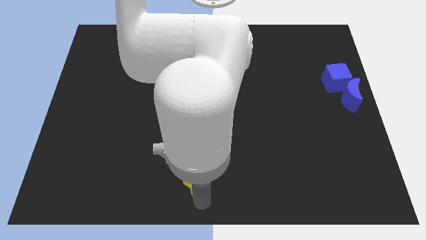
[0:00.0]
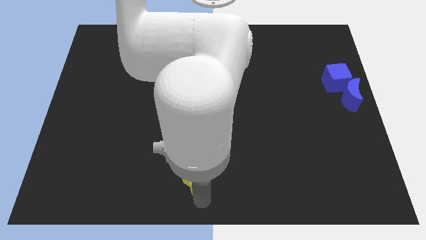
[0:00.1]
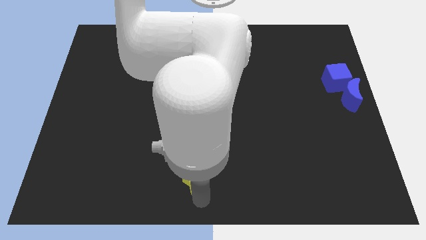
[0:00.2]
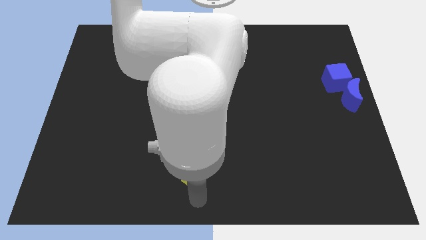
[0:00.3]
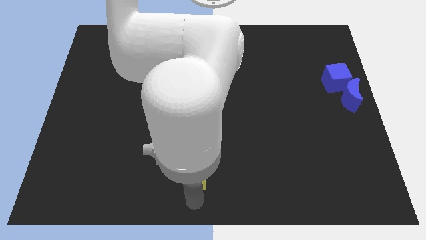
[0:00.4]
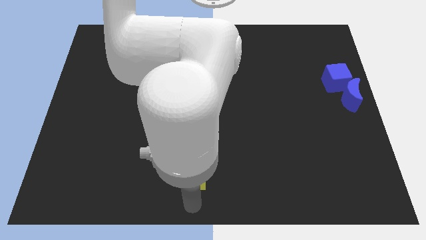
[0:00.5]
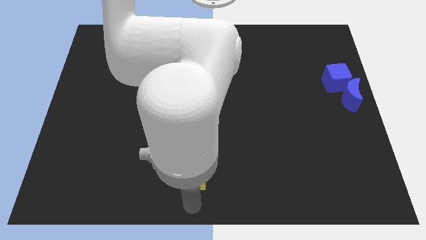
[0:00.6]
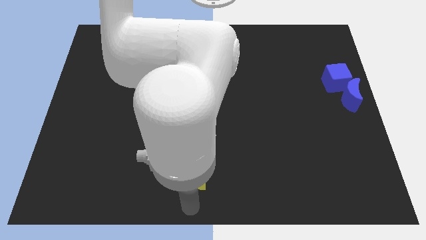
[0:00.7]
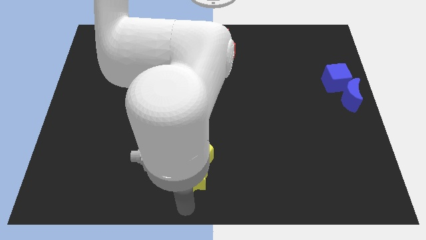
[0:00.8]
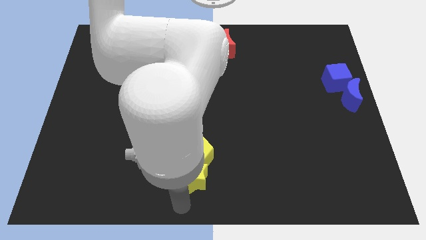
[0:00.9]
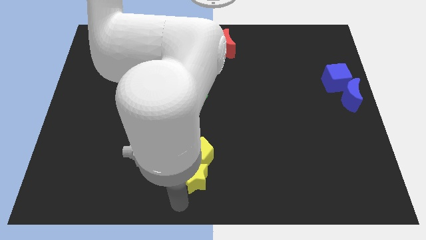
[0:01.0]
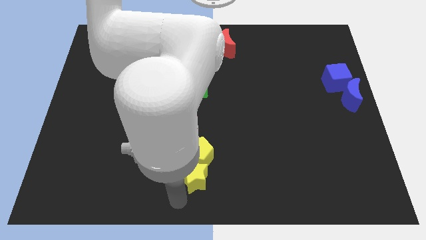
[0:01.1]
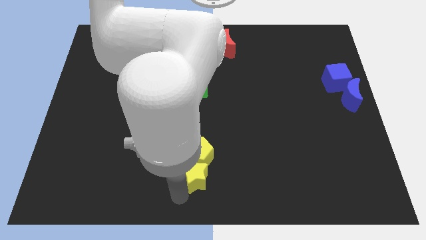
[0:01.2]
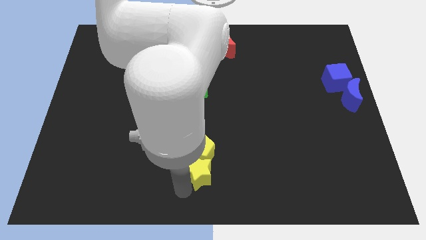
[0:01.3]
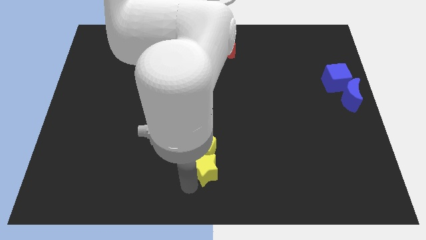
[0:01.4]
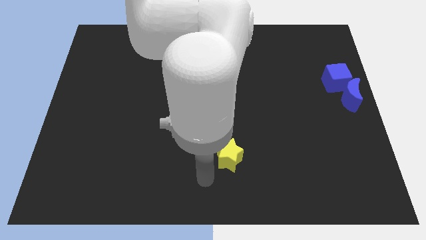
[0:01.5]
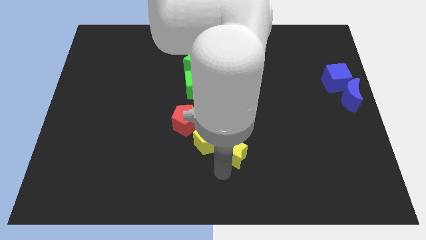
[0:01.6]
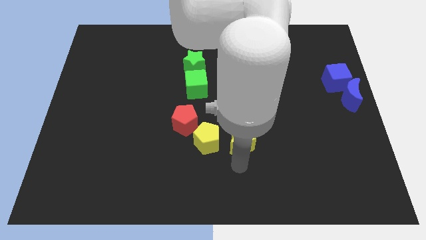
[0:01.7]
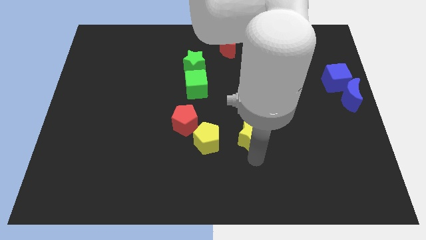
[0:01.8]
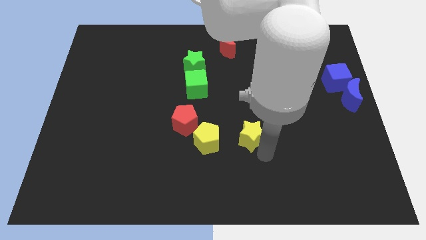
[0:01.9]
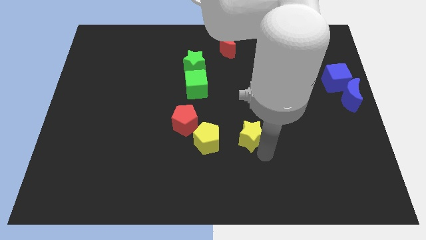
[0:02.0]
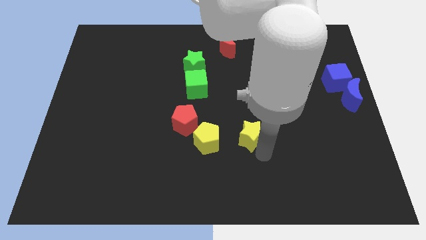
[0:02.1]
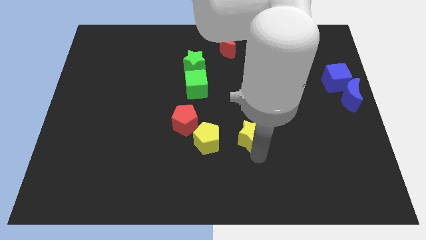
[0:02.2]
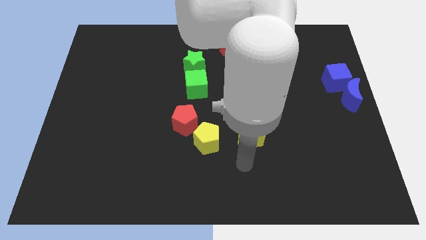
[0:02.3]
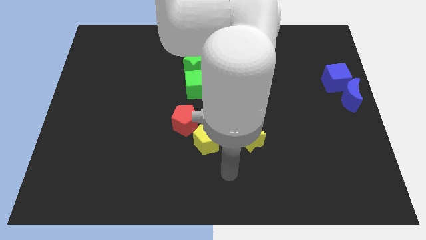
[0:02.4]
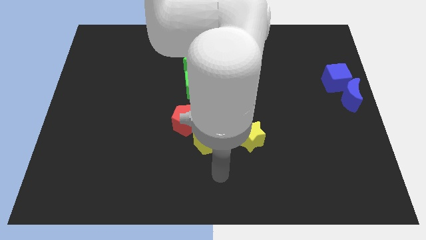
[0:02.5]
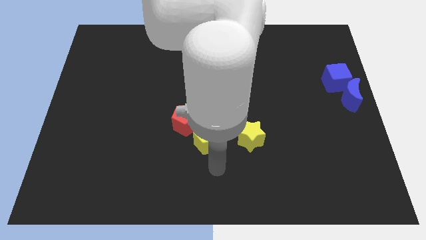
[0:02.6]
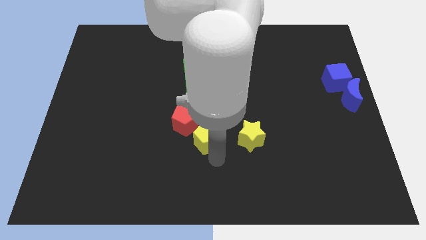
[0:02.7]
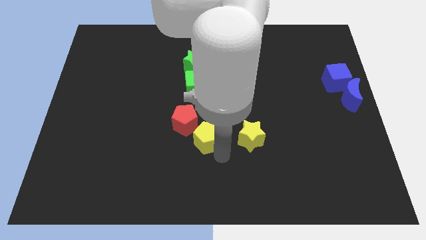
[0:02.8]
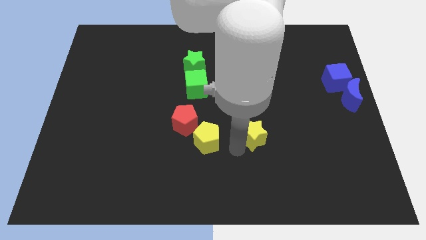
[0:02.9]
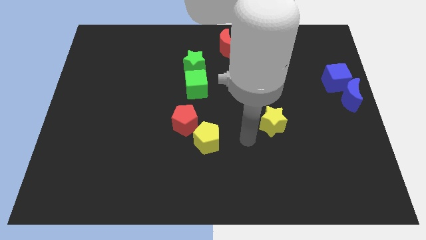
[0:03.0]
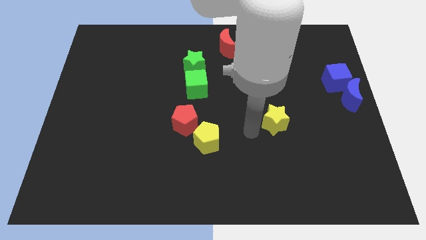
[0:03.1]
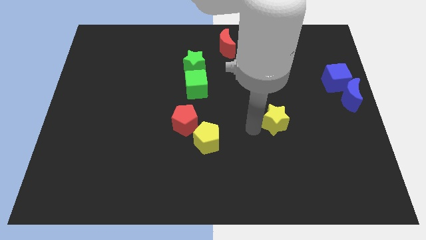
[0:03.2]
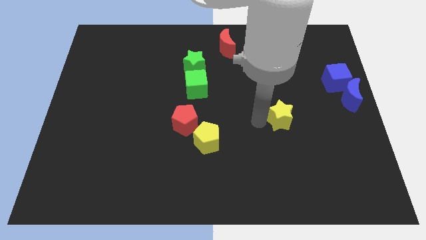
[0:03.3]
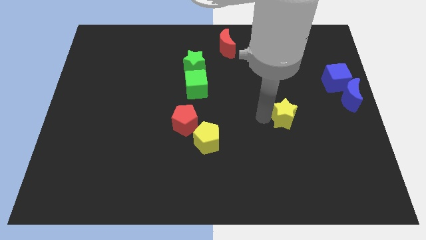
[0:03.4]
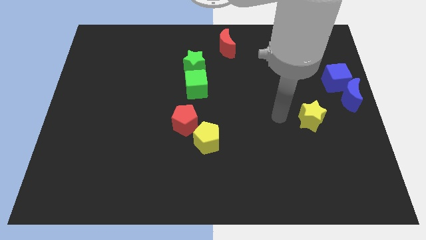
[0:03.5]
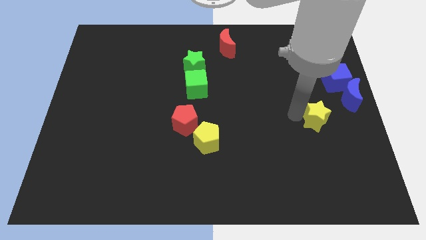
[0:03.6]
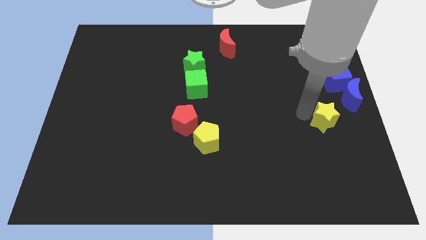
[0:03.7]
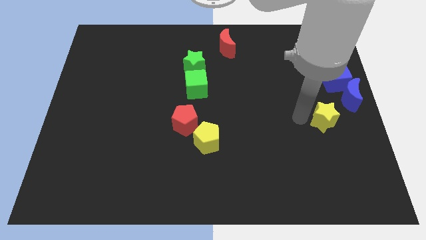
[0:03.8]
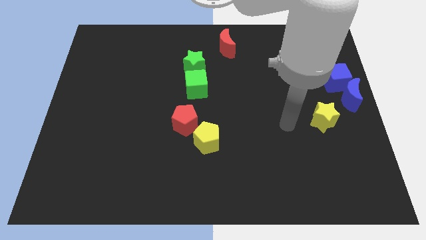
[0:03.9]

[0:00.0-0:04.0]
push yellow star towards the blue crescent

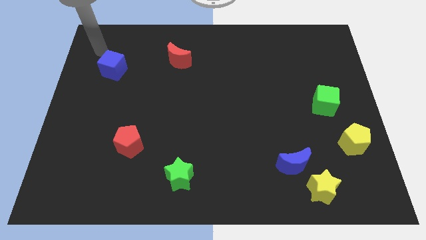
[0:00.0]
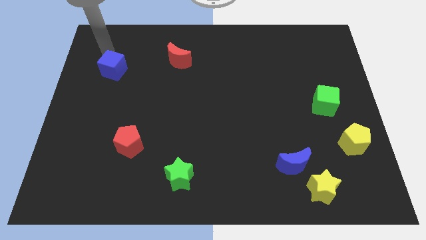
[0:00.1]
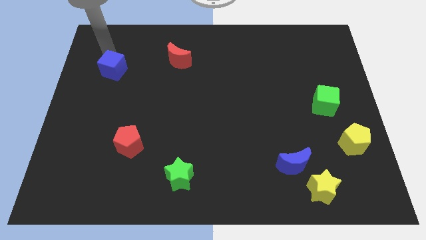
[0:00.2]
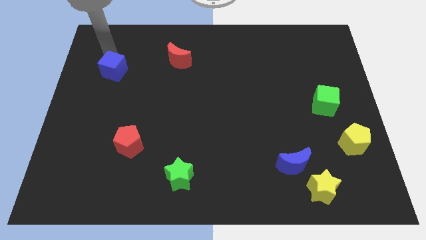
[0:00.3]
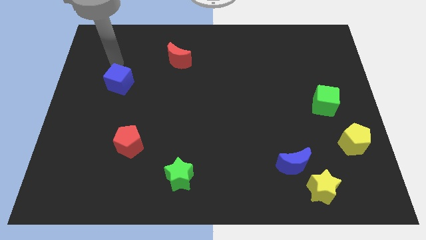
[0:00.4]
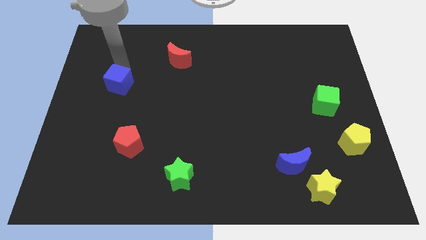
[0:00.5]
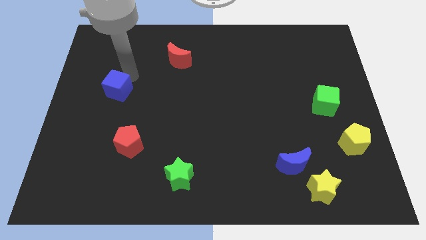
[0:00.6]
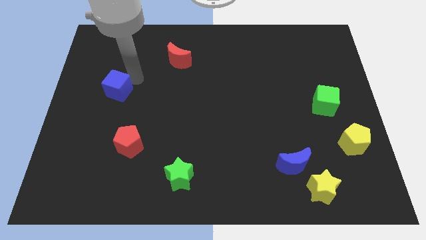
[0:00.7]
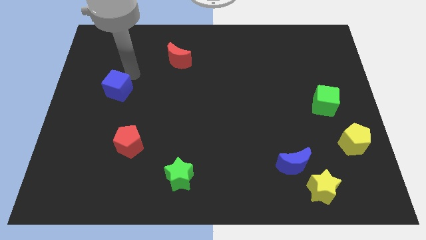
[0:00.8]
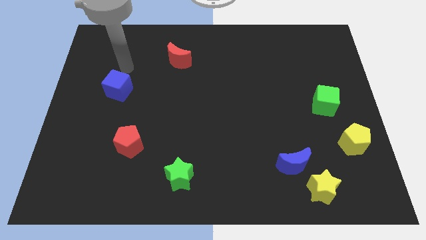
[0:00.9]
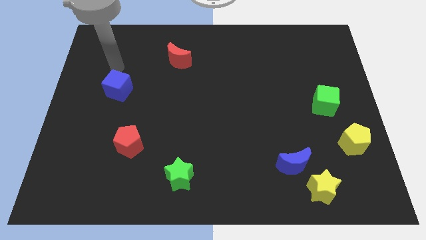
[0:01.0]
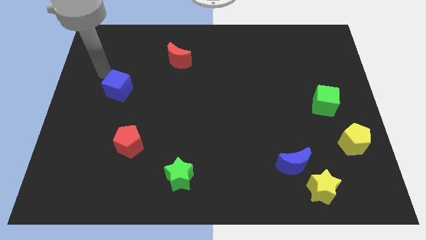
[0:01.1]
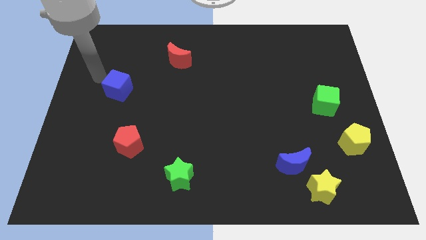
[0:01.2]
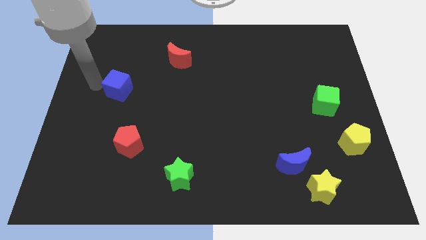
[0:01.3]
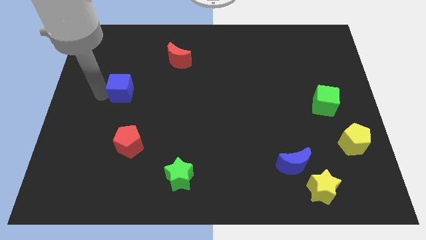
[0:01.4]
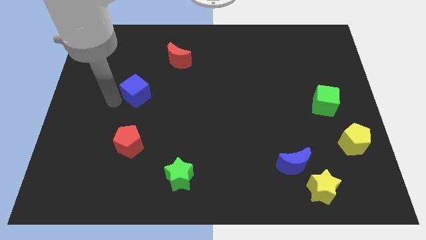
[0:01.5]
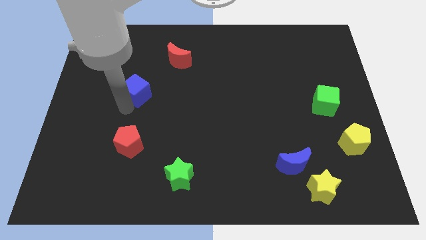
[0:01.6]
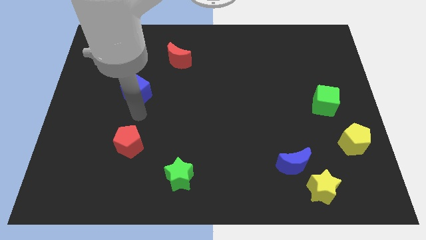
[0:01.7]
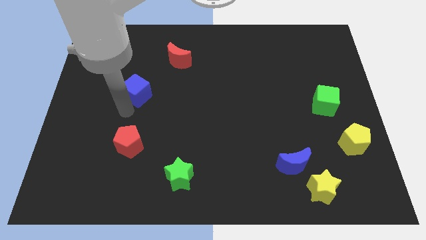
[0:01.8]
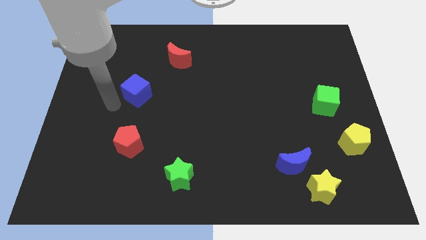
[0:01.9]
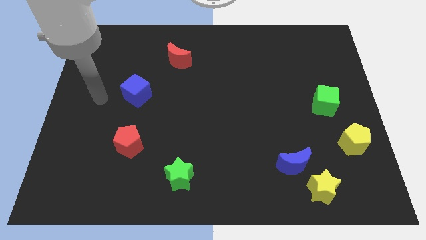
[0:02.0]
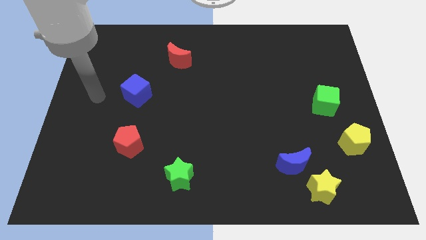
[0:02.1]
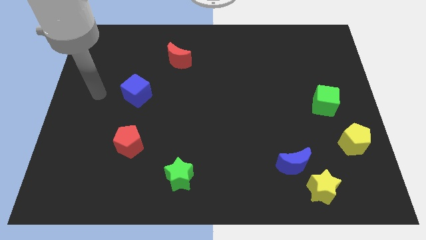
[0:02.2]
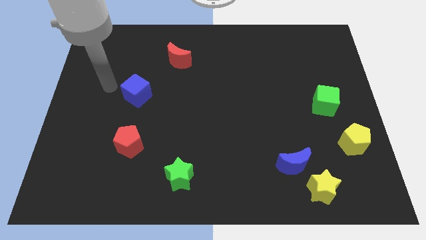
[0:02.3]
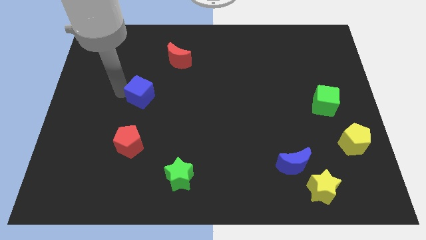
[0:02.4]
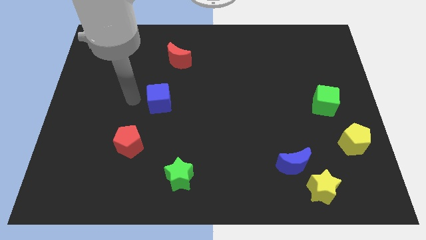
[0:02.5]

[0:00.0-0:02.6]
place the blue cube in between the red blocks

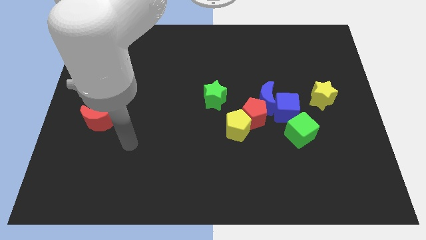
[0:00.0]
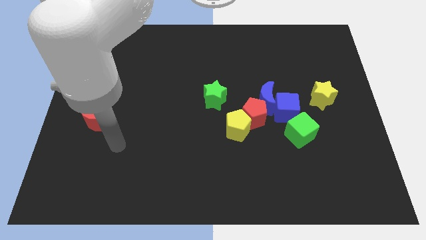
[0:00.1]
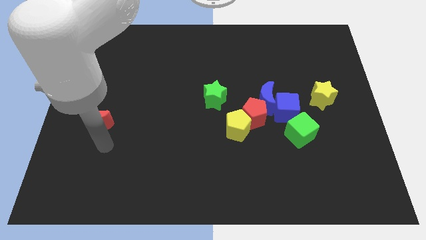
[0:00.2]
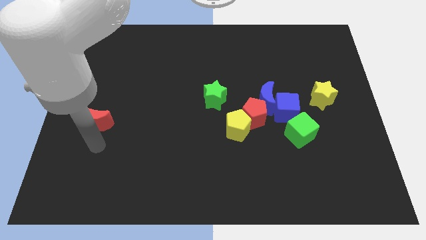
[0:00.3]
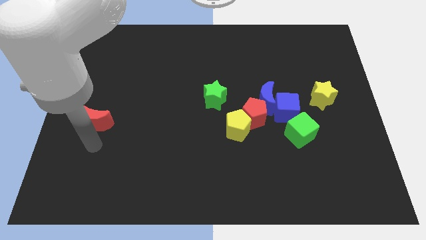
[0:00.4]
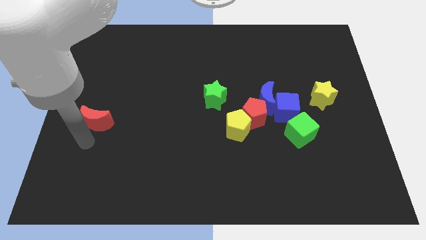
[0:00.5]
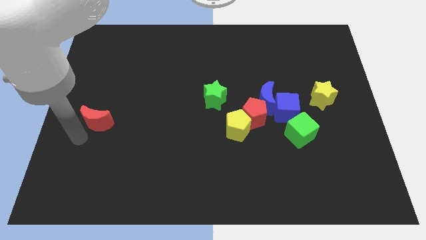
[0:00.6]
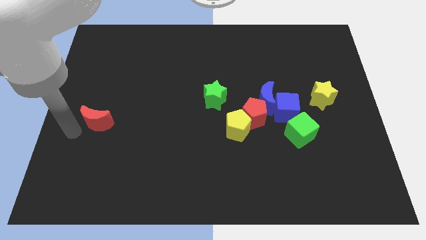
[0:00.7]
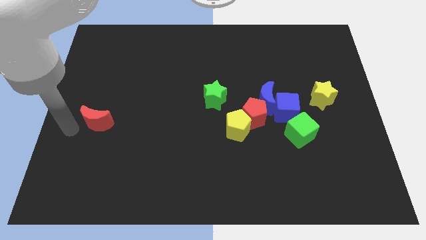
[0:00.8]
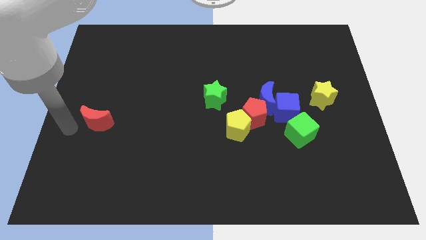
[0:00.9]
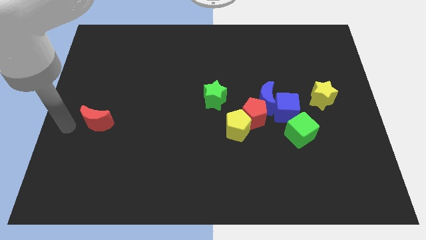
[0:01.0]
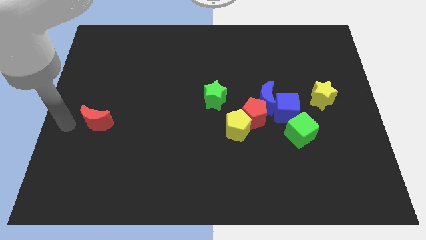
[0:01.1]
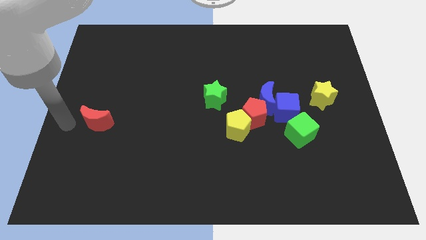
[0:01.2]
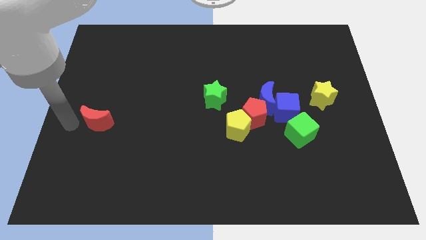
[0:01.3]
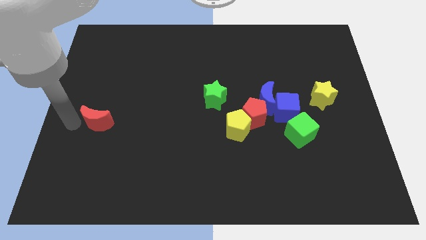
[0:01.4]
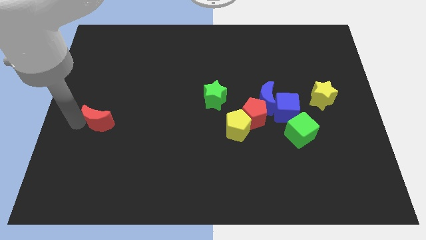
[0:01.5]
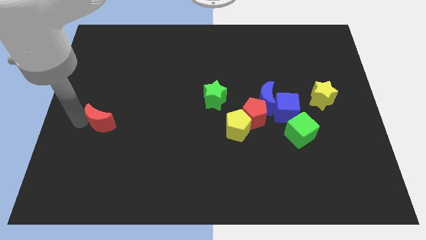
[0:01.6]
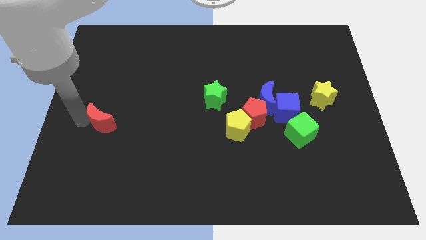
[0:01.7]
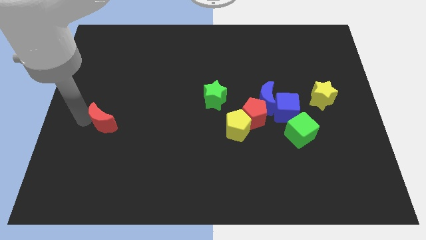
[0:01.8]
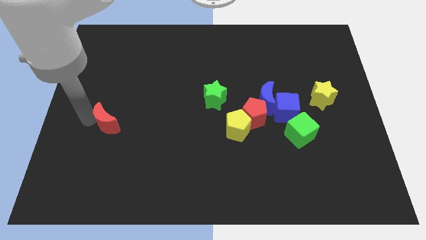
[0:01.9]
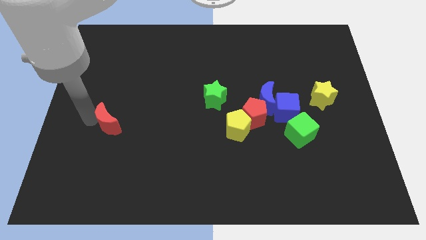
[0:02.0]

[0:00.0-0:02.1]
touch left side of red moon with your arm

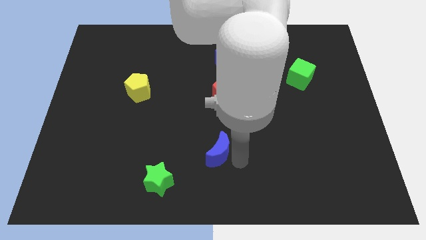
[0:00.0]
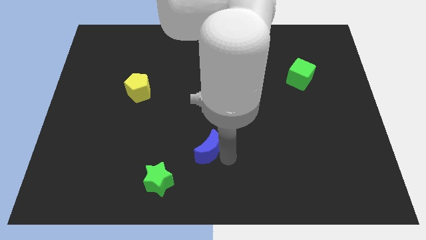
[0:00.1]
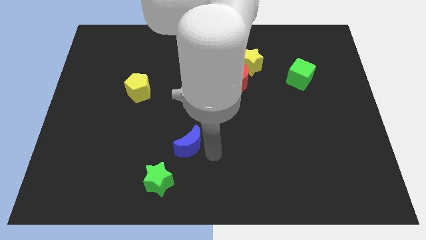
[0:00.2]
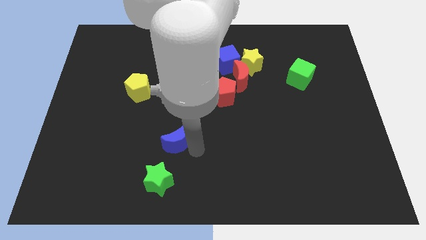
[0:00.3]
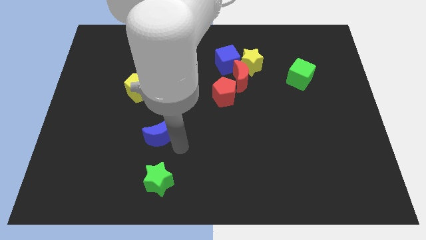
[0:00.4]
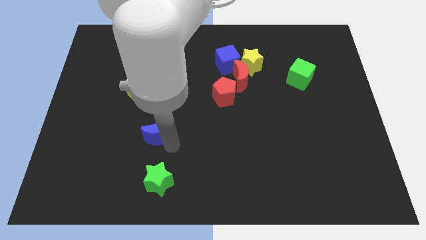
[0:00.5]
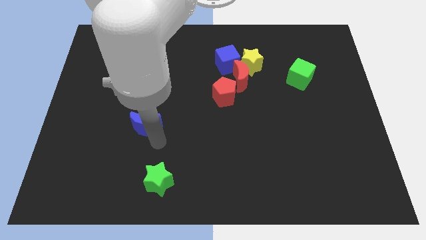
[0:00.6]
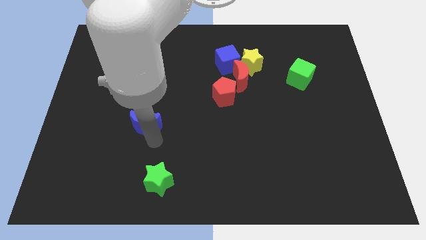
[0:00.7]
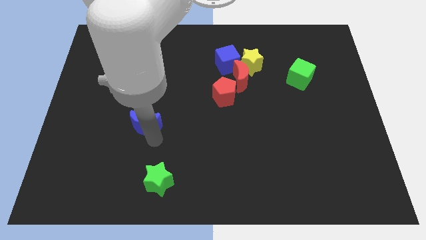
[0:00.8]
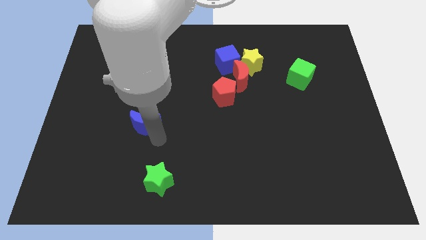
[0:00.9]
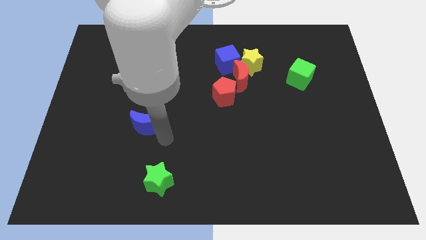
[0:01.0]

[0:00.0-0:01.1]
move blue moon towards yellow pentagon
